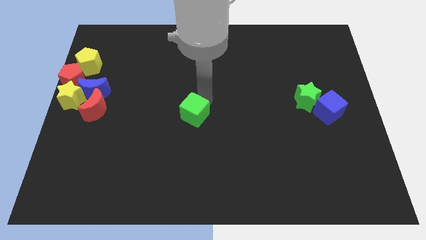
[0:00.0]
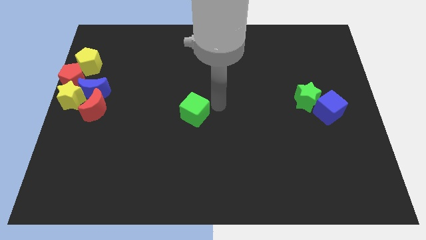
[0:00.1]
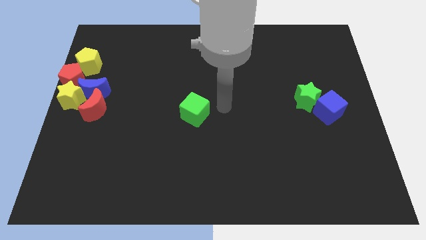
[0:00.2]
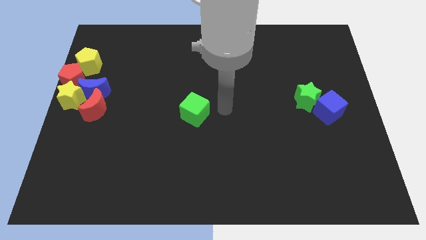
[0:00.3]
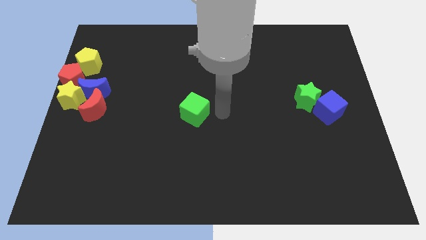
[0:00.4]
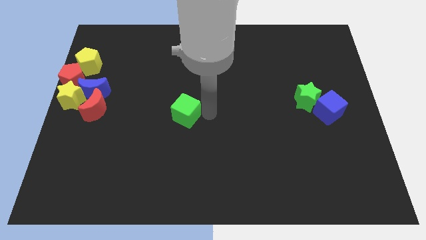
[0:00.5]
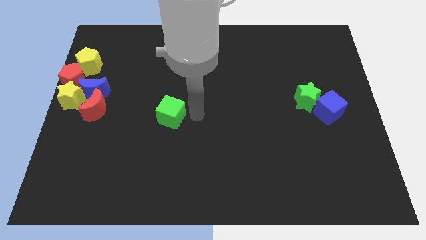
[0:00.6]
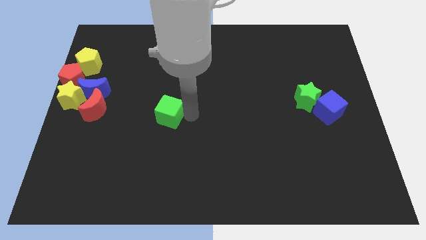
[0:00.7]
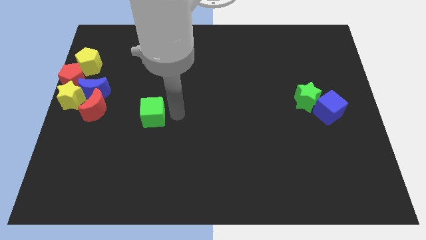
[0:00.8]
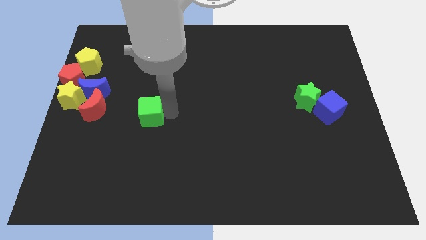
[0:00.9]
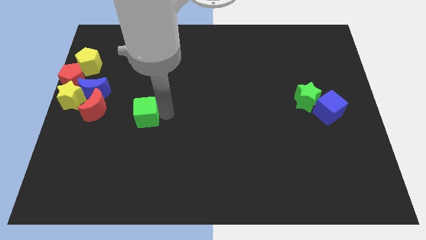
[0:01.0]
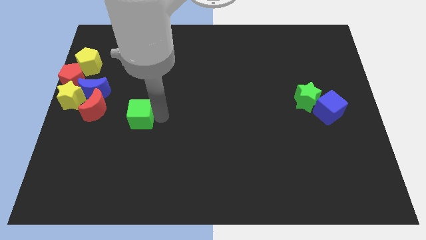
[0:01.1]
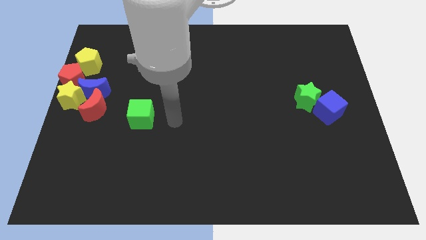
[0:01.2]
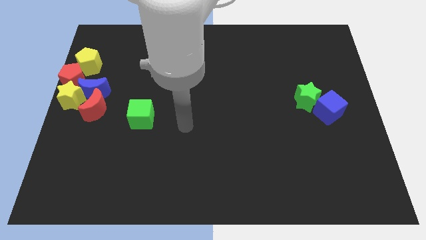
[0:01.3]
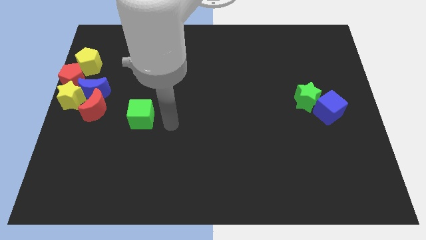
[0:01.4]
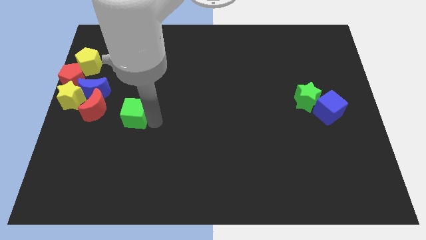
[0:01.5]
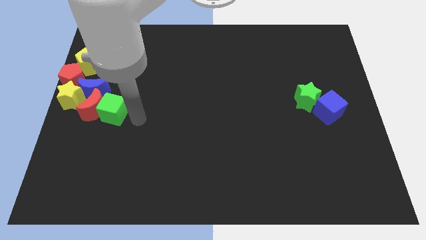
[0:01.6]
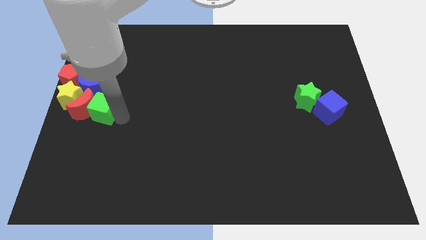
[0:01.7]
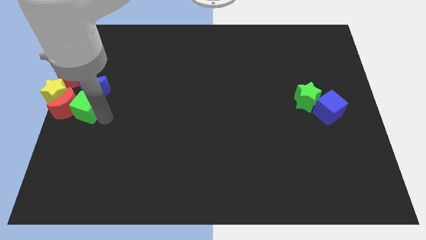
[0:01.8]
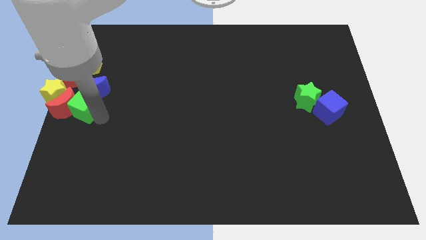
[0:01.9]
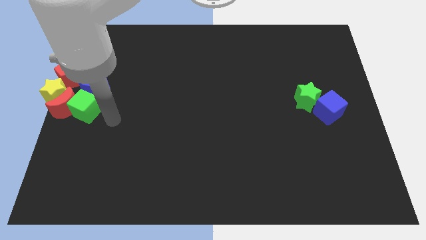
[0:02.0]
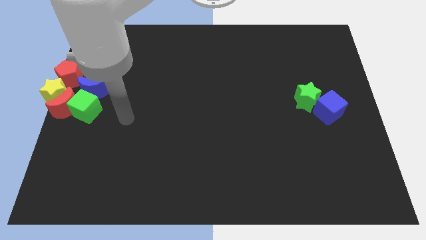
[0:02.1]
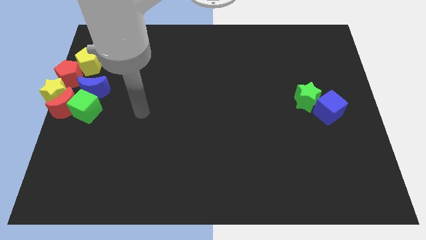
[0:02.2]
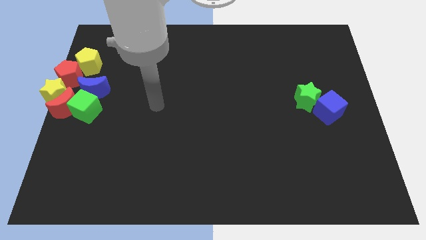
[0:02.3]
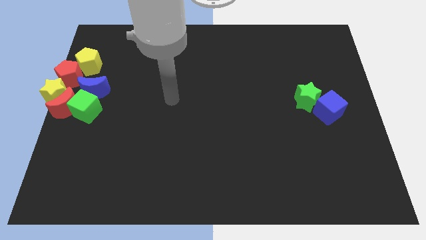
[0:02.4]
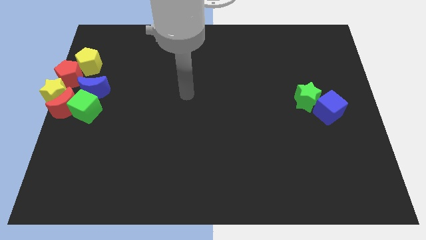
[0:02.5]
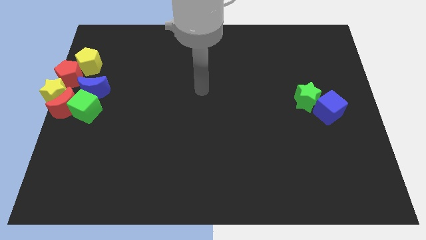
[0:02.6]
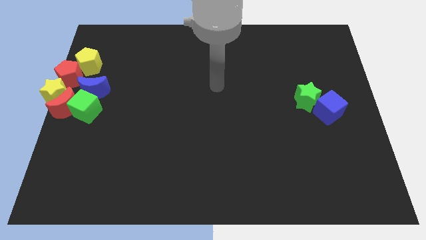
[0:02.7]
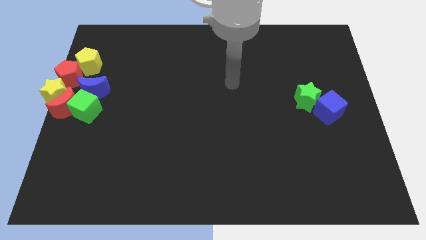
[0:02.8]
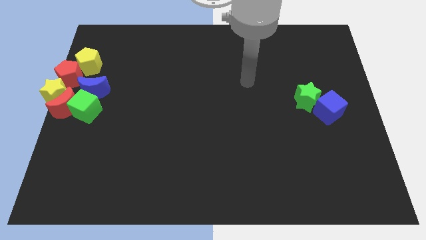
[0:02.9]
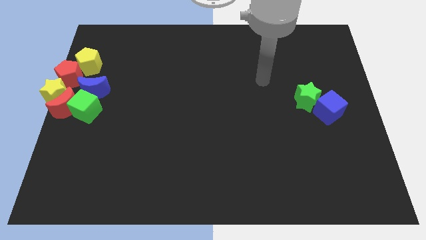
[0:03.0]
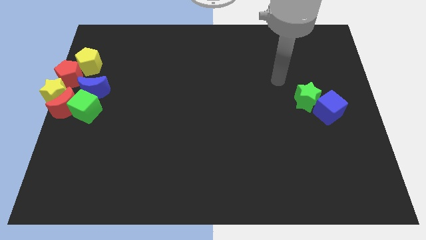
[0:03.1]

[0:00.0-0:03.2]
push the green cube into the red crescent

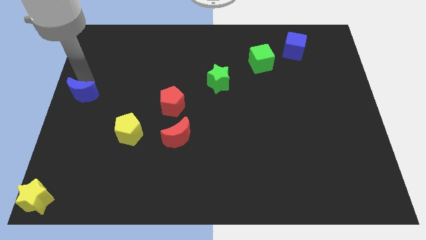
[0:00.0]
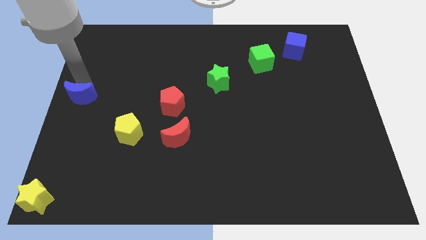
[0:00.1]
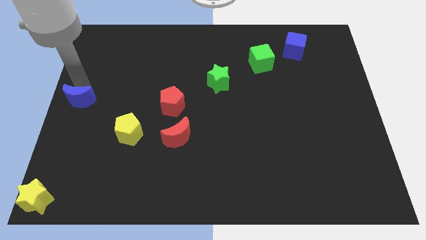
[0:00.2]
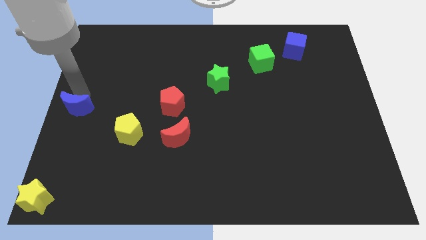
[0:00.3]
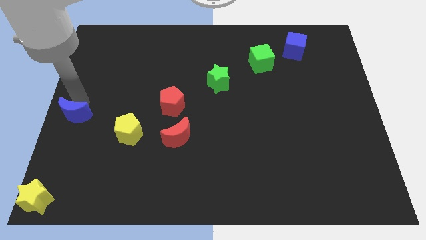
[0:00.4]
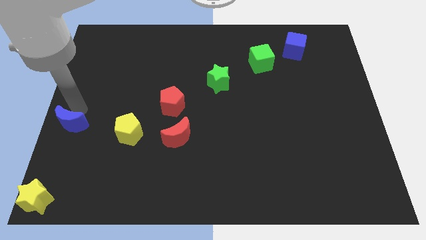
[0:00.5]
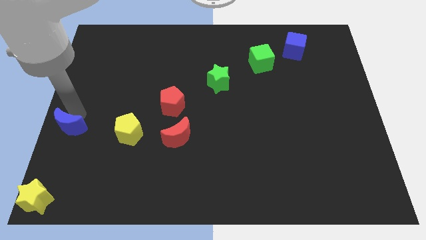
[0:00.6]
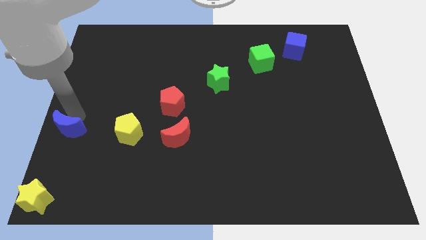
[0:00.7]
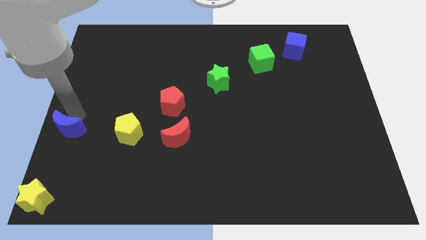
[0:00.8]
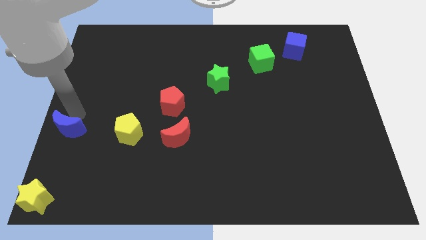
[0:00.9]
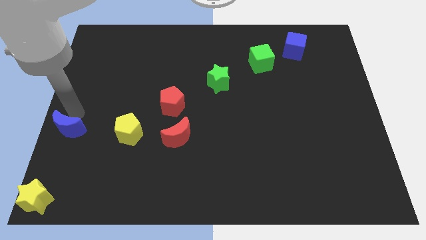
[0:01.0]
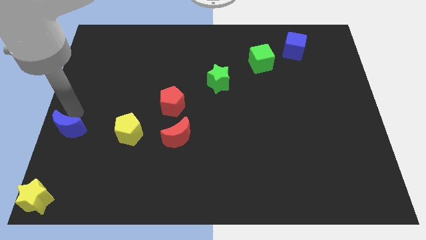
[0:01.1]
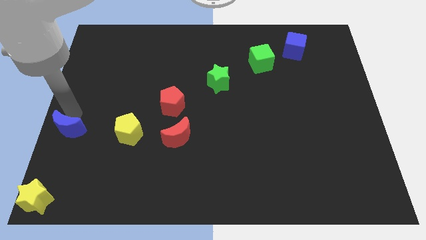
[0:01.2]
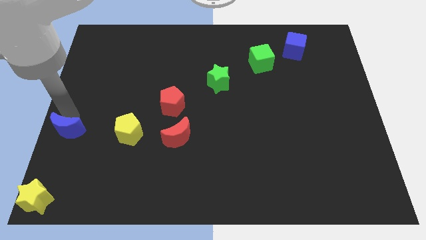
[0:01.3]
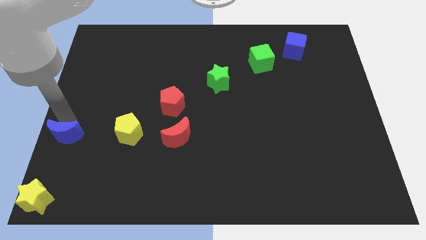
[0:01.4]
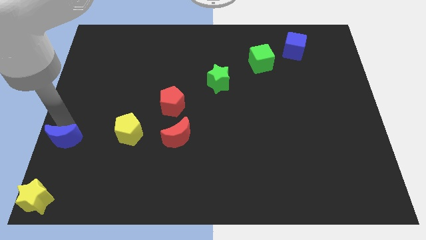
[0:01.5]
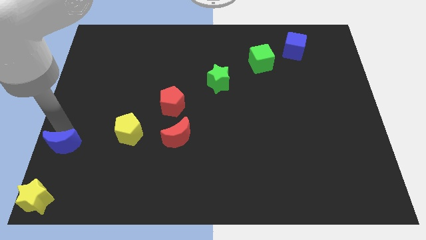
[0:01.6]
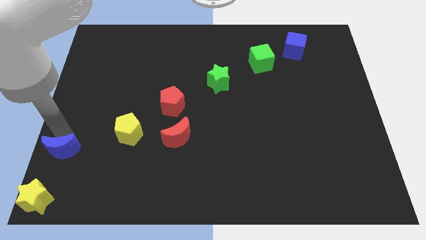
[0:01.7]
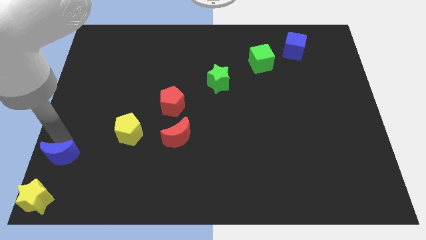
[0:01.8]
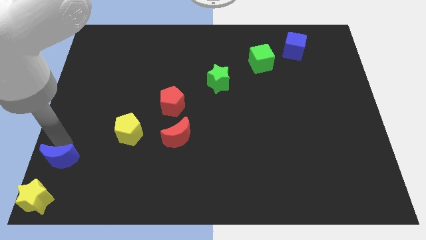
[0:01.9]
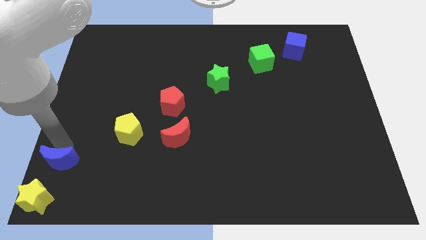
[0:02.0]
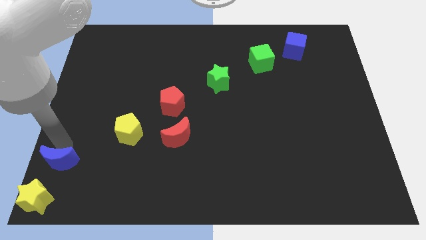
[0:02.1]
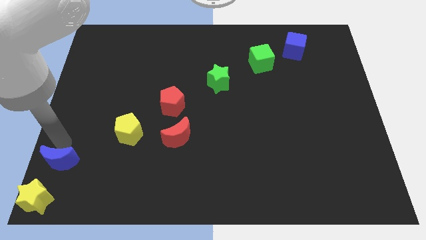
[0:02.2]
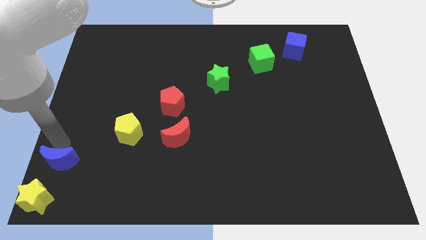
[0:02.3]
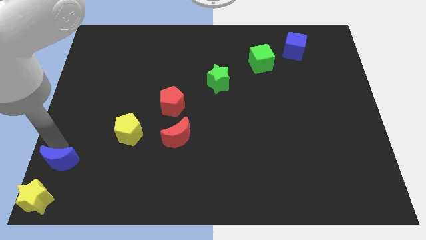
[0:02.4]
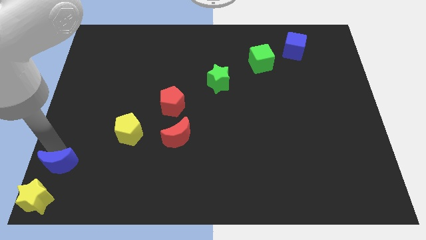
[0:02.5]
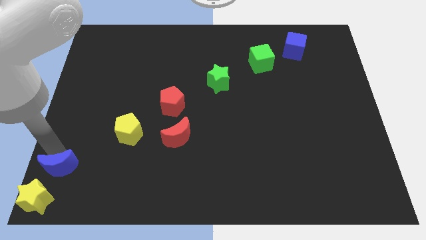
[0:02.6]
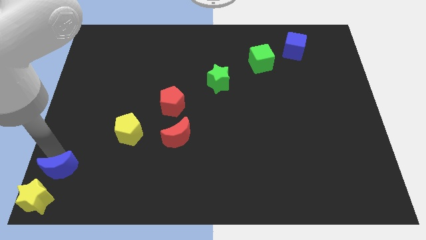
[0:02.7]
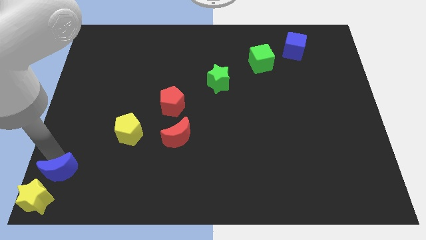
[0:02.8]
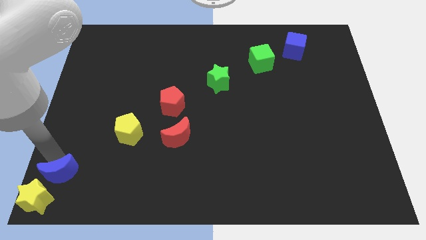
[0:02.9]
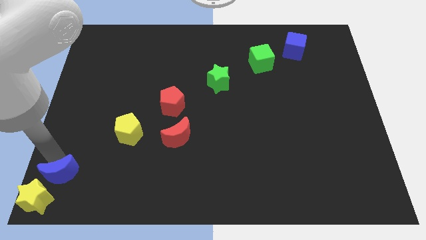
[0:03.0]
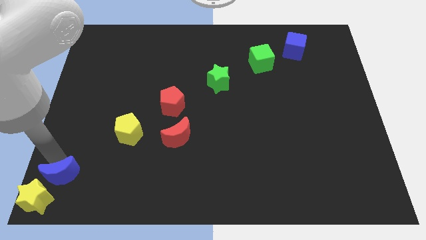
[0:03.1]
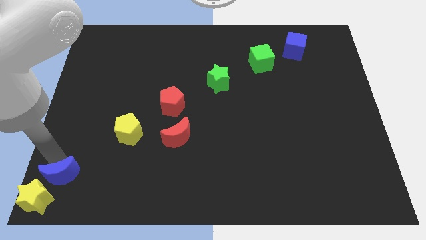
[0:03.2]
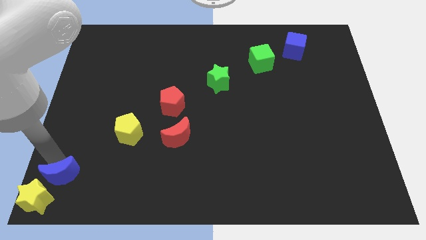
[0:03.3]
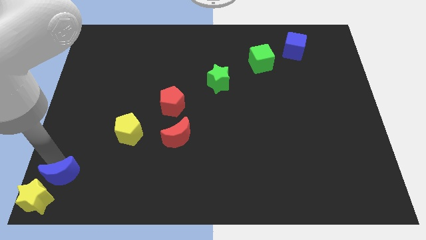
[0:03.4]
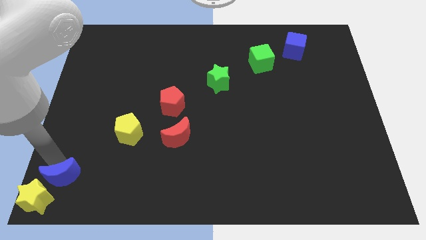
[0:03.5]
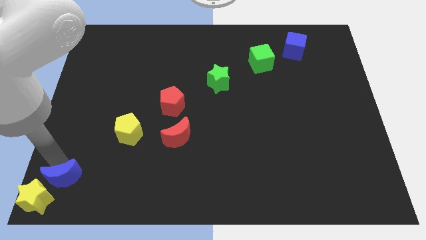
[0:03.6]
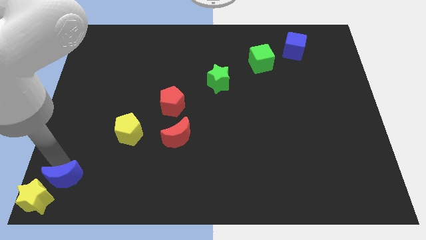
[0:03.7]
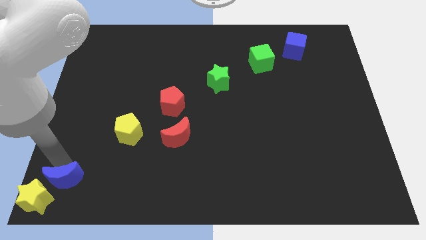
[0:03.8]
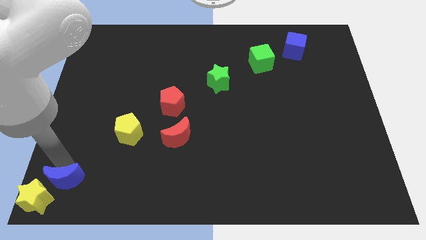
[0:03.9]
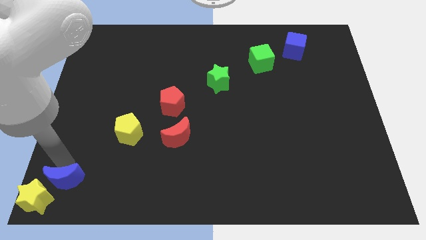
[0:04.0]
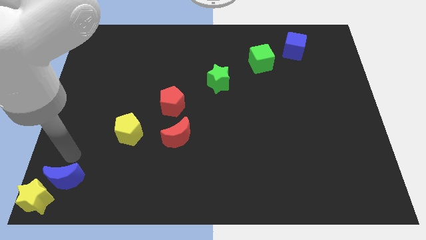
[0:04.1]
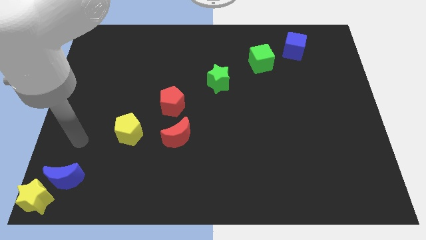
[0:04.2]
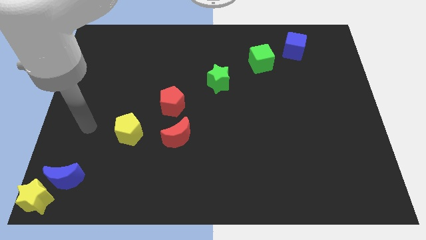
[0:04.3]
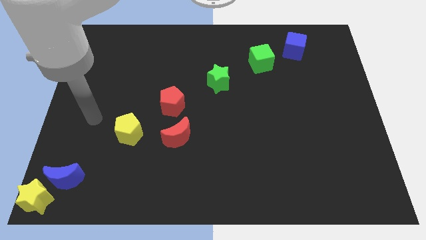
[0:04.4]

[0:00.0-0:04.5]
place the blue crescent above the yellow star

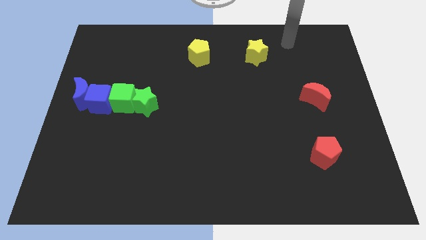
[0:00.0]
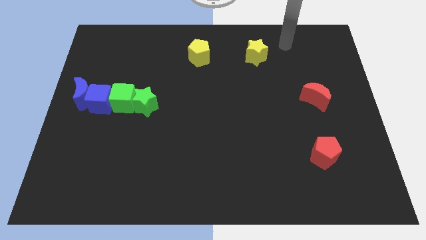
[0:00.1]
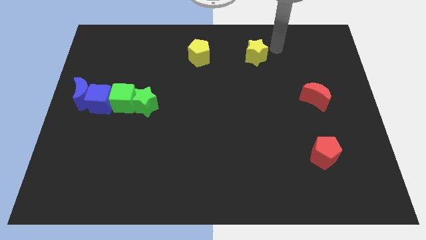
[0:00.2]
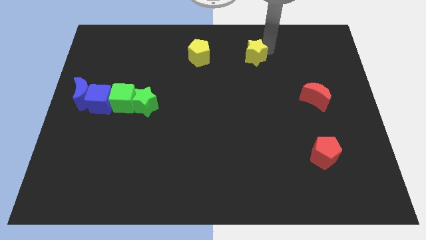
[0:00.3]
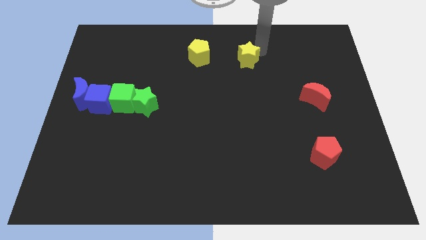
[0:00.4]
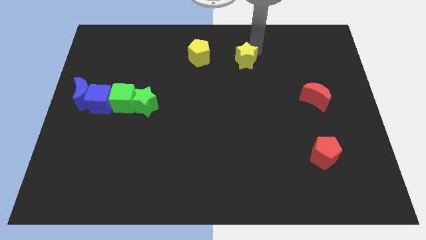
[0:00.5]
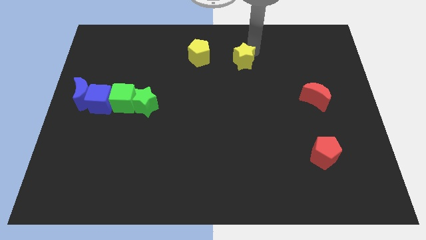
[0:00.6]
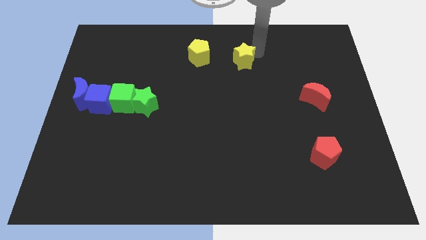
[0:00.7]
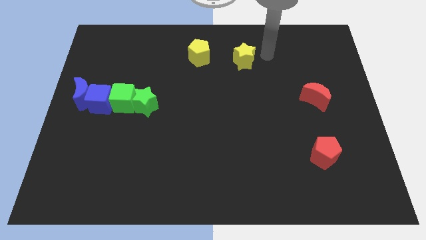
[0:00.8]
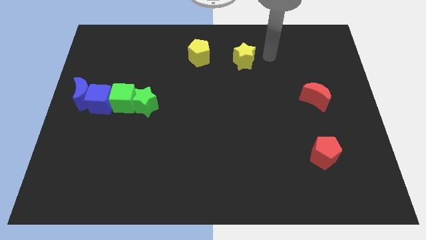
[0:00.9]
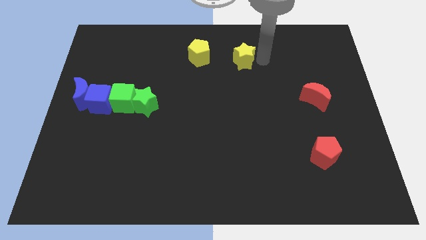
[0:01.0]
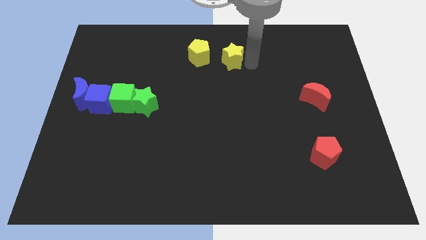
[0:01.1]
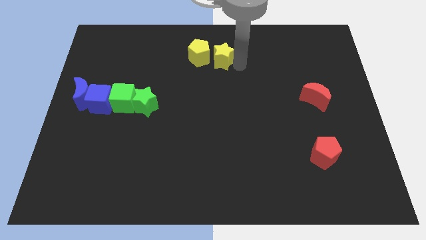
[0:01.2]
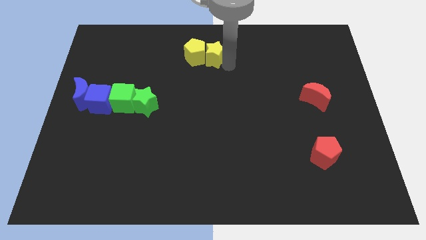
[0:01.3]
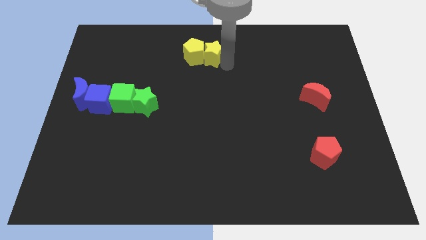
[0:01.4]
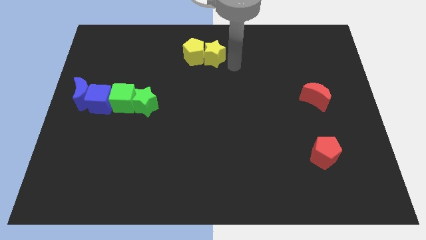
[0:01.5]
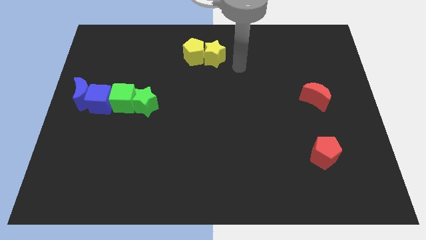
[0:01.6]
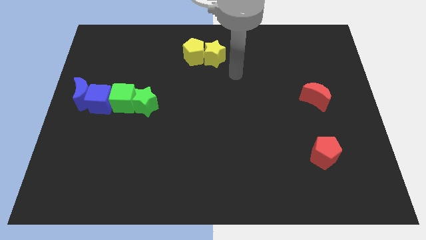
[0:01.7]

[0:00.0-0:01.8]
push the yellow star into the yellow pentagon
